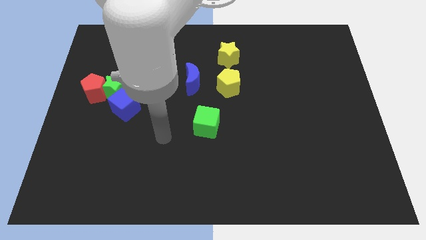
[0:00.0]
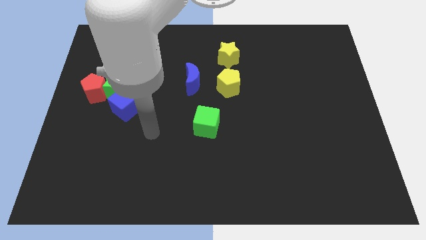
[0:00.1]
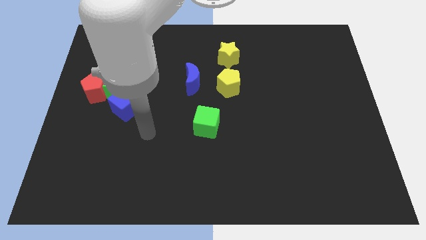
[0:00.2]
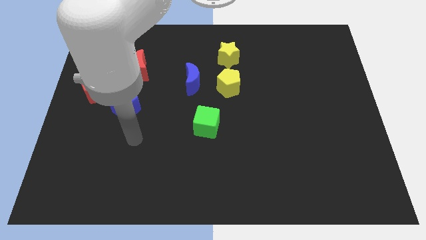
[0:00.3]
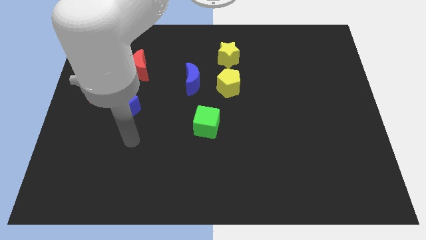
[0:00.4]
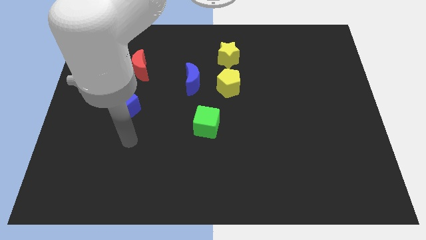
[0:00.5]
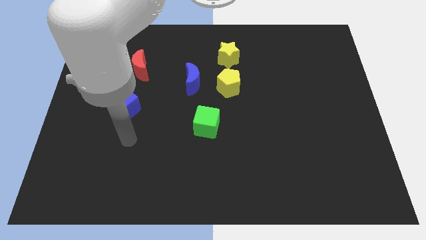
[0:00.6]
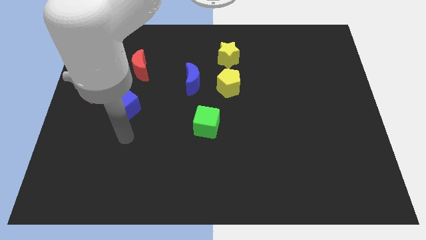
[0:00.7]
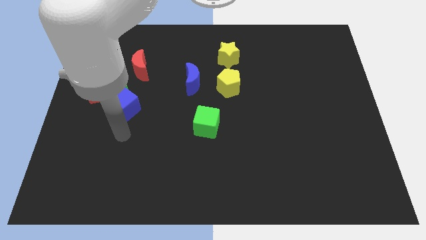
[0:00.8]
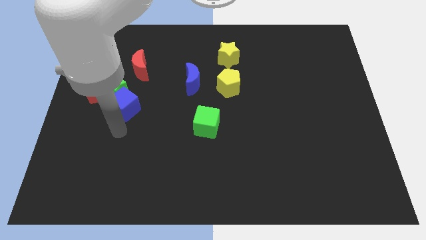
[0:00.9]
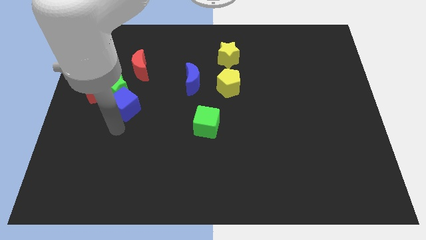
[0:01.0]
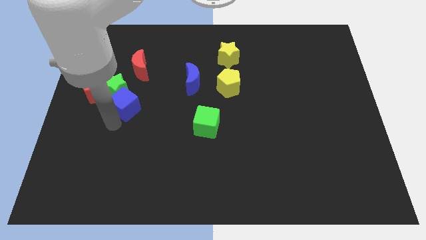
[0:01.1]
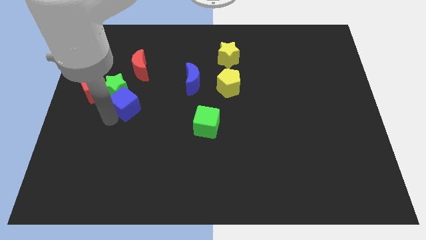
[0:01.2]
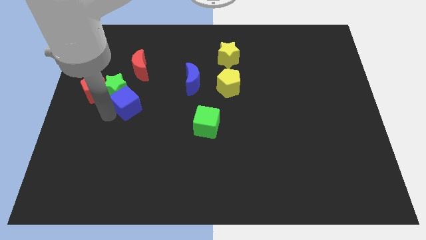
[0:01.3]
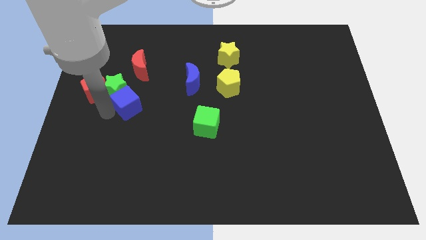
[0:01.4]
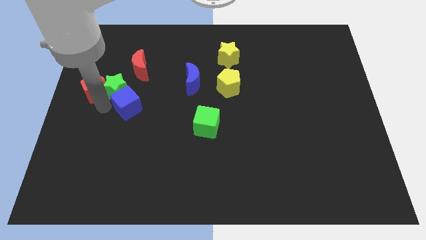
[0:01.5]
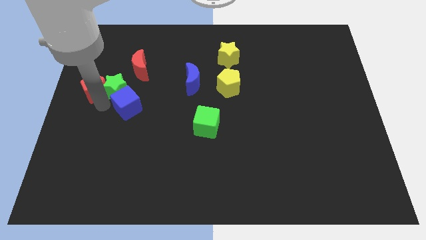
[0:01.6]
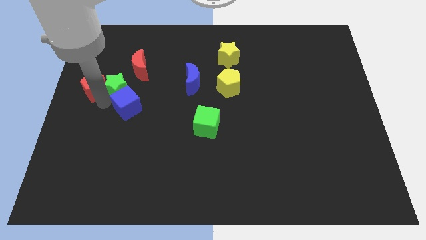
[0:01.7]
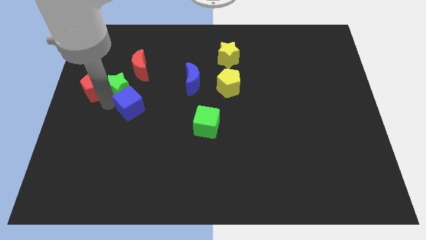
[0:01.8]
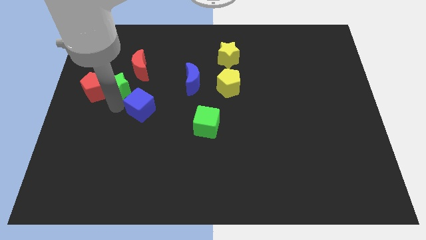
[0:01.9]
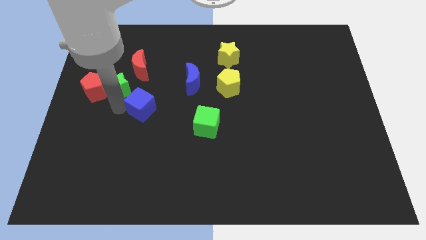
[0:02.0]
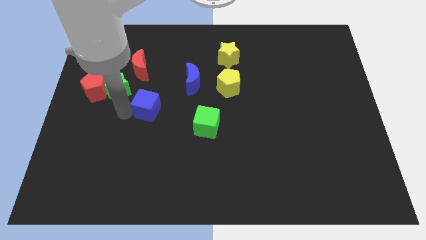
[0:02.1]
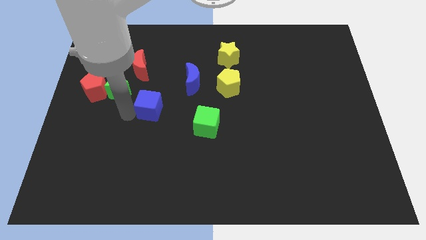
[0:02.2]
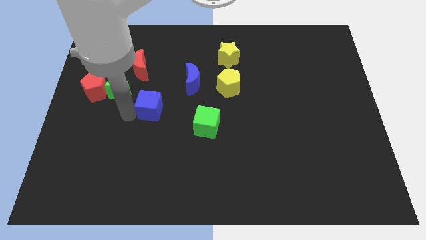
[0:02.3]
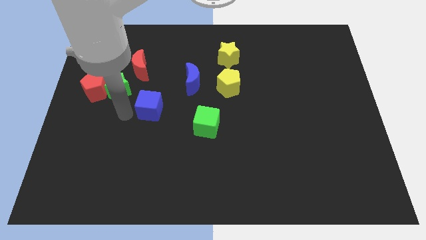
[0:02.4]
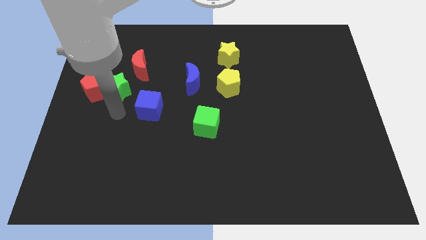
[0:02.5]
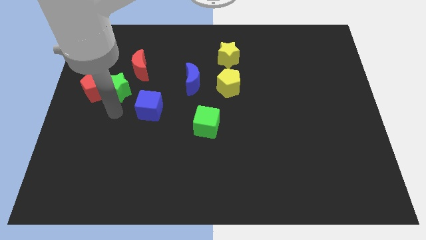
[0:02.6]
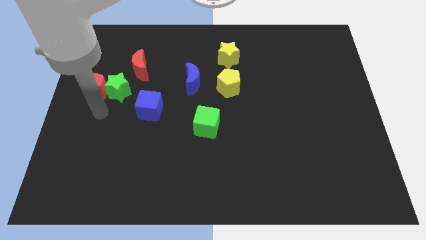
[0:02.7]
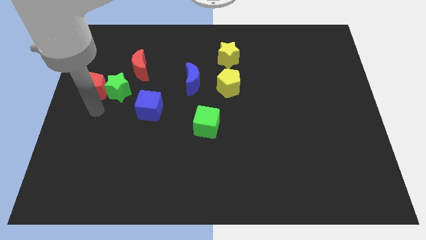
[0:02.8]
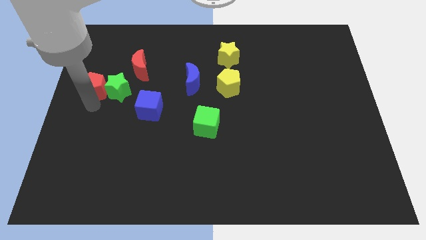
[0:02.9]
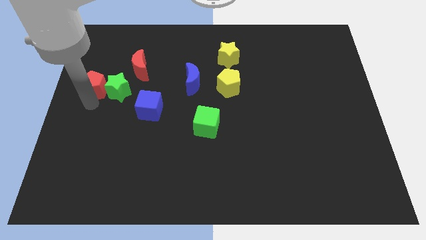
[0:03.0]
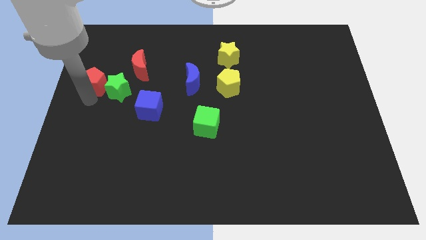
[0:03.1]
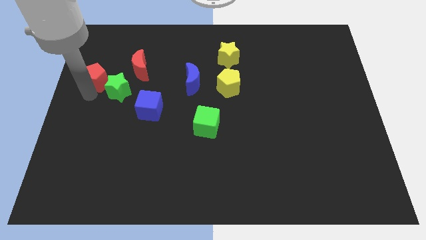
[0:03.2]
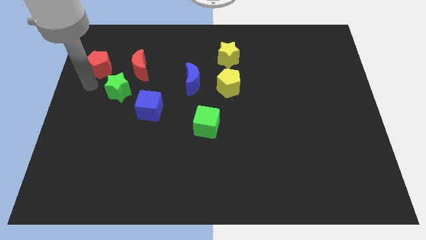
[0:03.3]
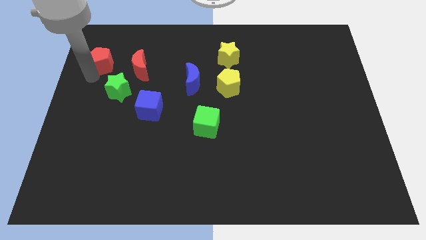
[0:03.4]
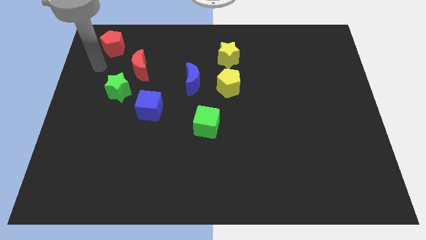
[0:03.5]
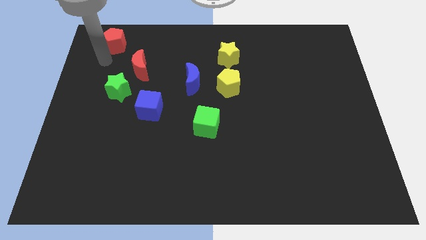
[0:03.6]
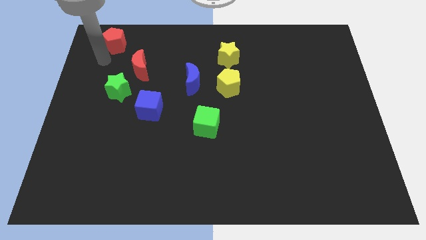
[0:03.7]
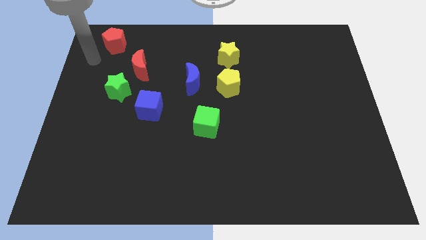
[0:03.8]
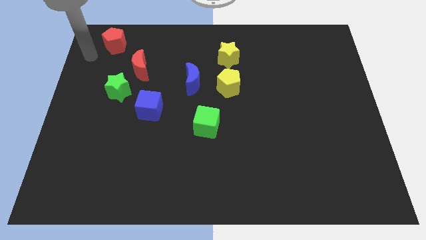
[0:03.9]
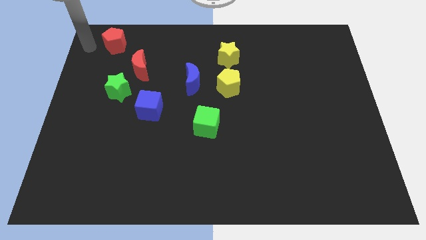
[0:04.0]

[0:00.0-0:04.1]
separate the blue cube and red pentagon from the green star

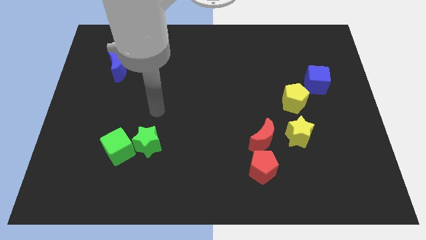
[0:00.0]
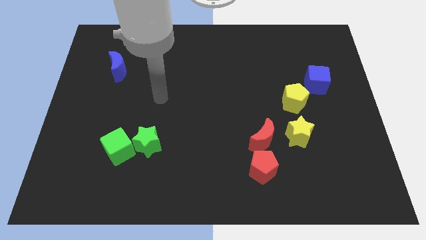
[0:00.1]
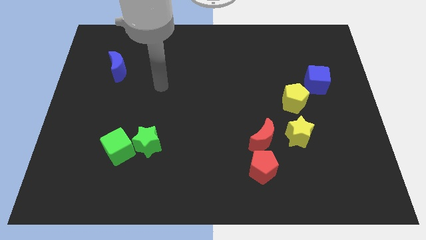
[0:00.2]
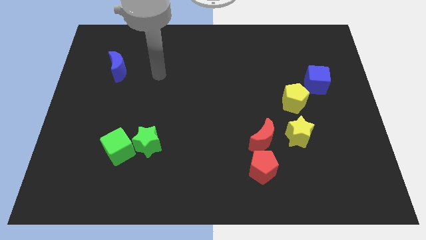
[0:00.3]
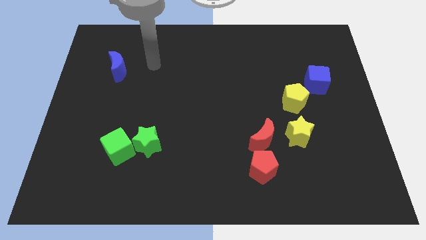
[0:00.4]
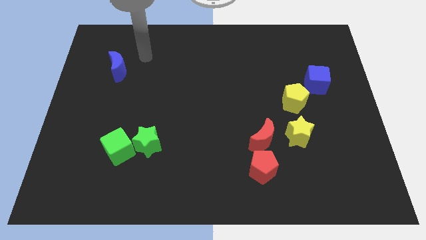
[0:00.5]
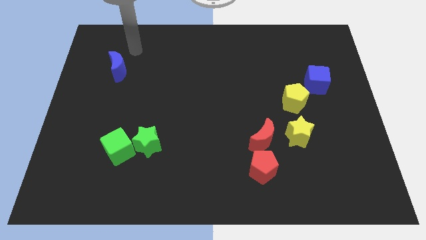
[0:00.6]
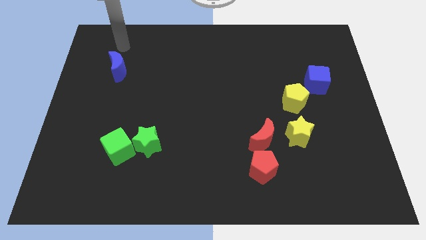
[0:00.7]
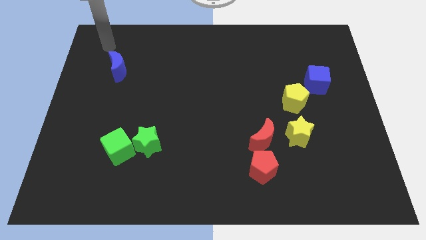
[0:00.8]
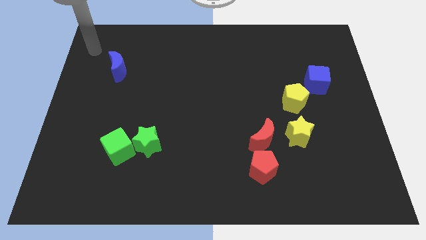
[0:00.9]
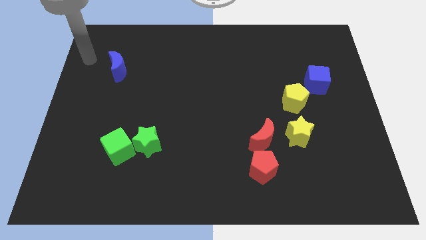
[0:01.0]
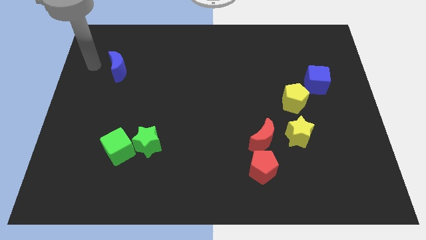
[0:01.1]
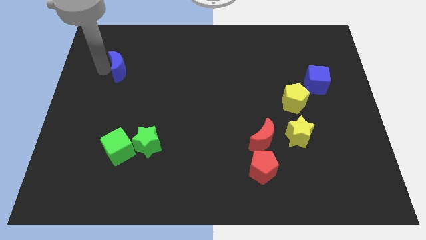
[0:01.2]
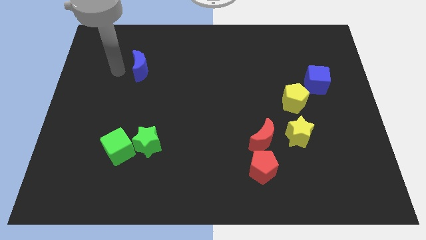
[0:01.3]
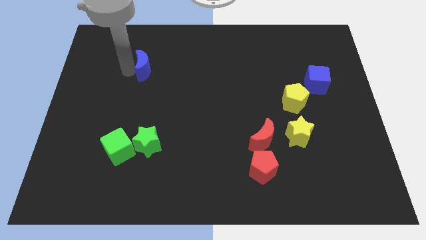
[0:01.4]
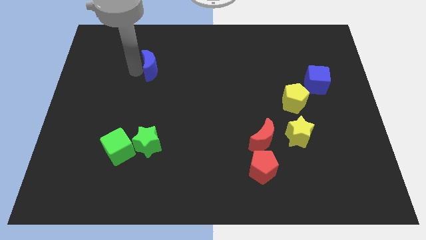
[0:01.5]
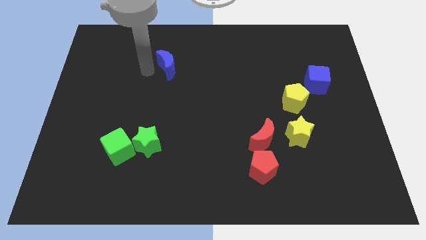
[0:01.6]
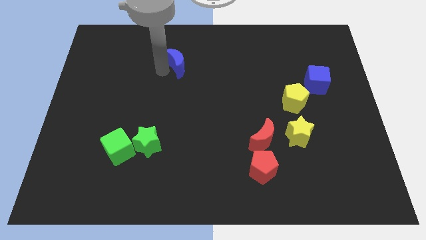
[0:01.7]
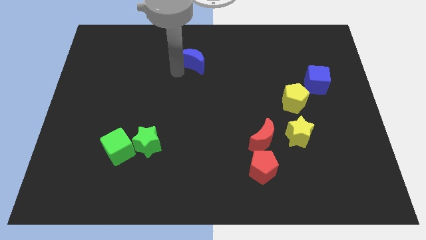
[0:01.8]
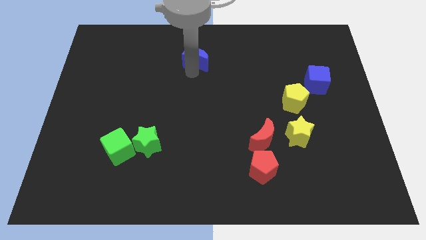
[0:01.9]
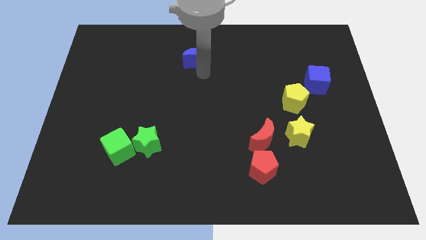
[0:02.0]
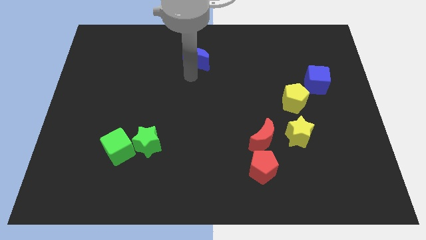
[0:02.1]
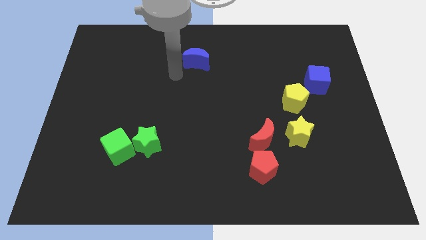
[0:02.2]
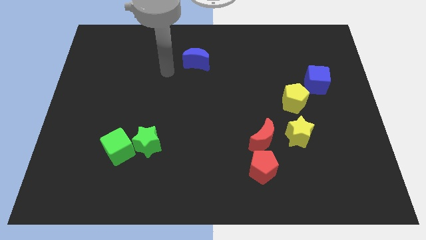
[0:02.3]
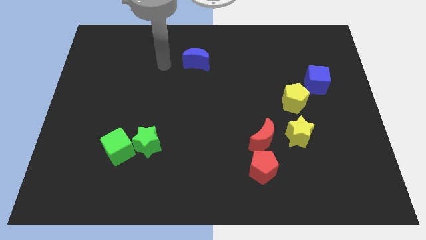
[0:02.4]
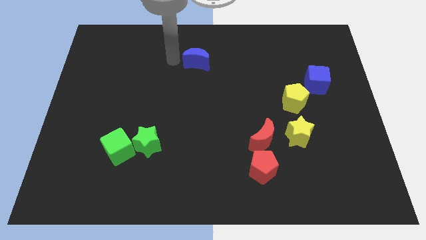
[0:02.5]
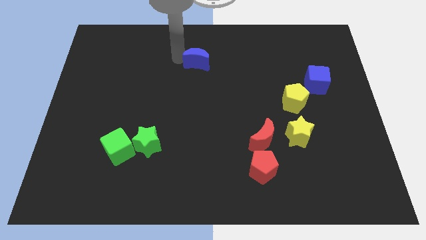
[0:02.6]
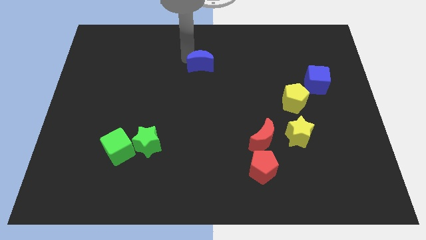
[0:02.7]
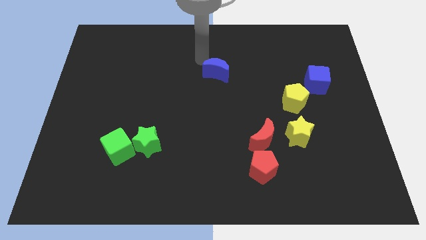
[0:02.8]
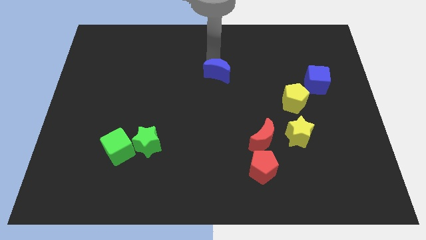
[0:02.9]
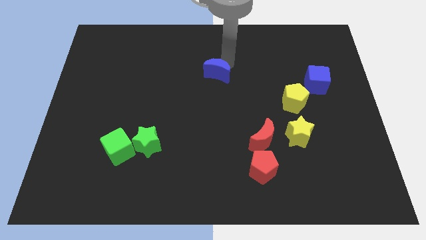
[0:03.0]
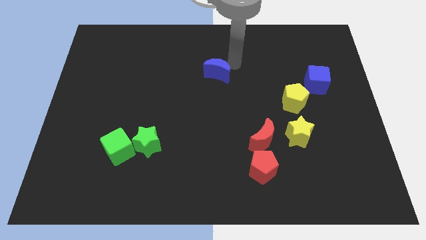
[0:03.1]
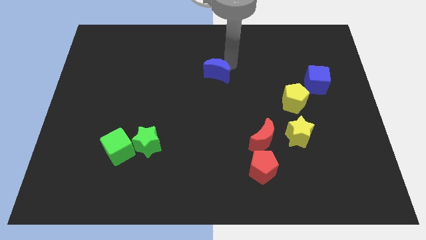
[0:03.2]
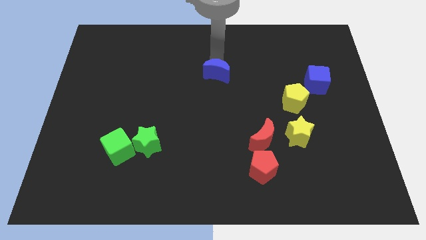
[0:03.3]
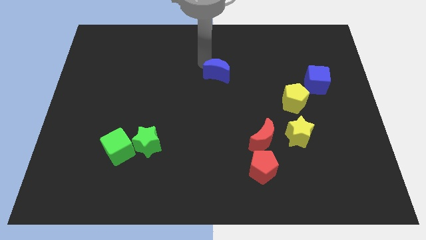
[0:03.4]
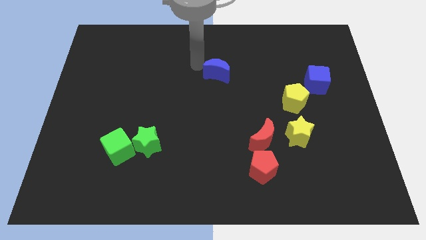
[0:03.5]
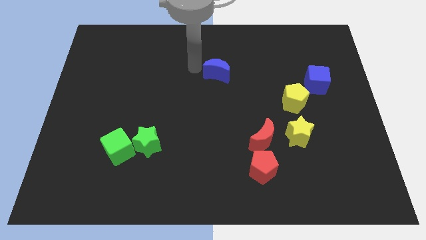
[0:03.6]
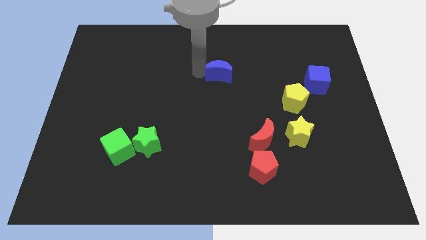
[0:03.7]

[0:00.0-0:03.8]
move the blue crescent towards the yellow pentagon

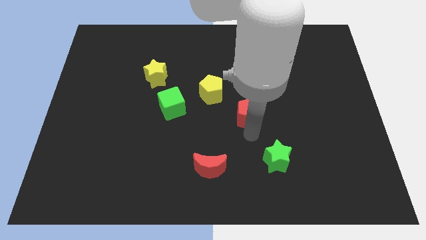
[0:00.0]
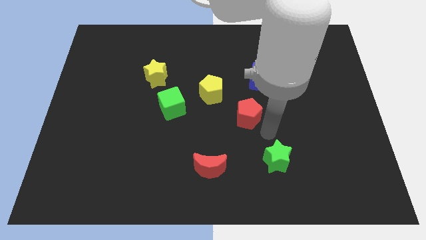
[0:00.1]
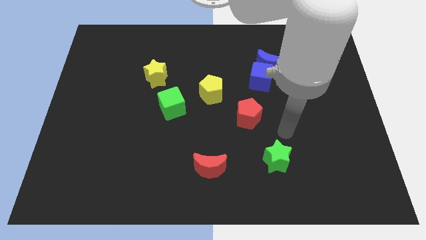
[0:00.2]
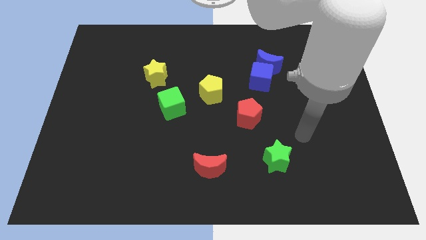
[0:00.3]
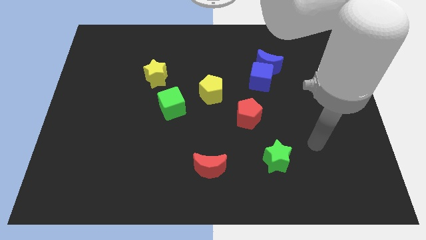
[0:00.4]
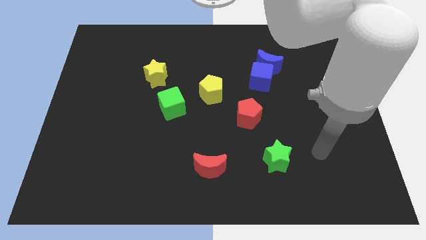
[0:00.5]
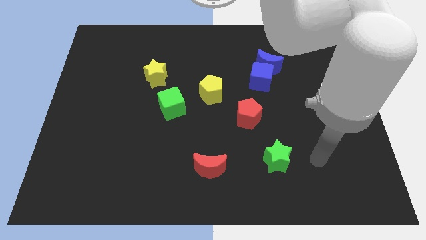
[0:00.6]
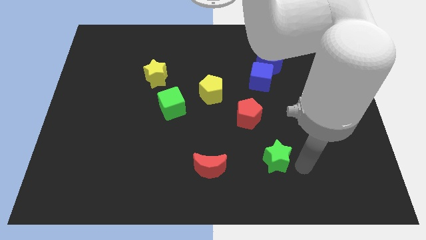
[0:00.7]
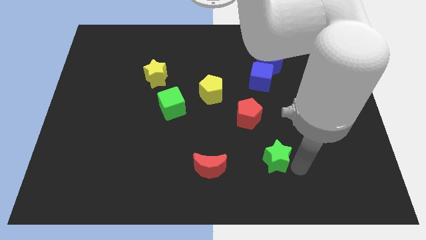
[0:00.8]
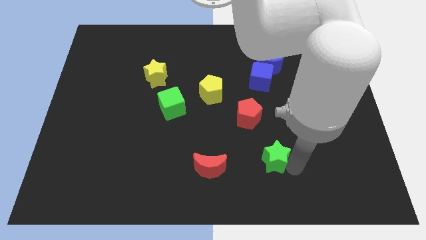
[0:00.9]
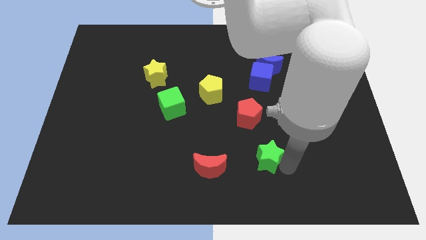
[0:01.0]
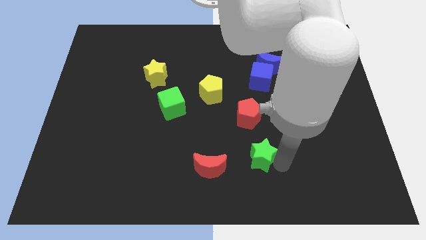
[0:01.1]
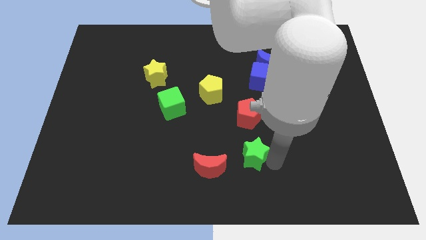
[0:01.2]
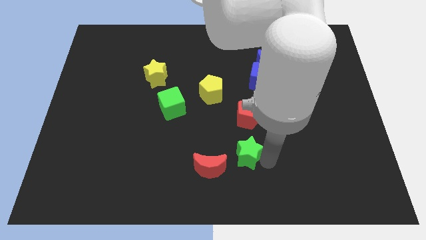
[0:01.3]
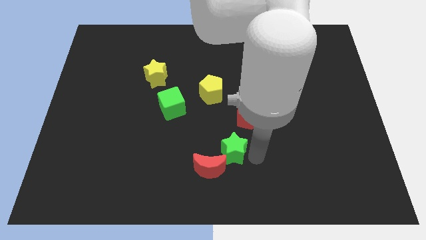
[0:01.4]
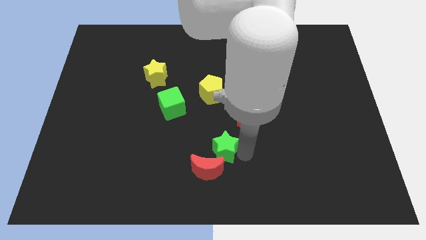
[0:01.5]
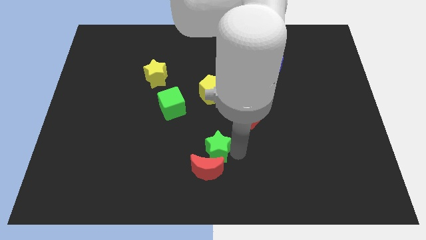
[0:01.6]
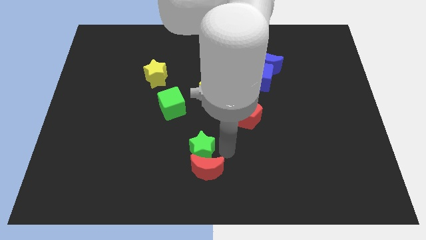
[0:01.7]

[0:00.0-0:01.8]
place the green star above the red crescent
